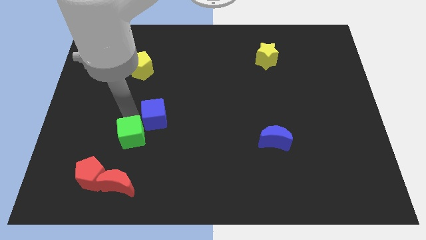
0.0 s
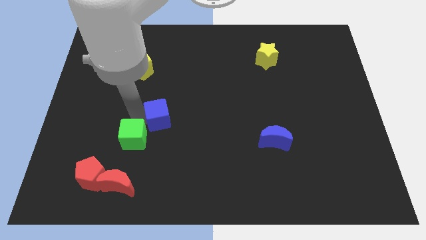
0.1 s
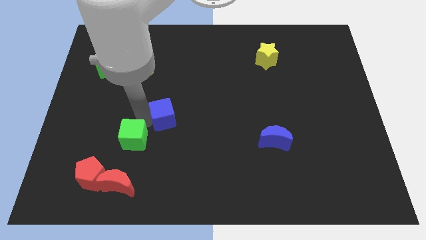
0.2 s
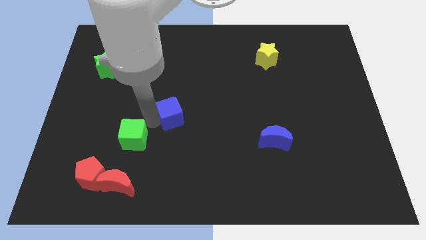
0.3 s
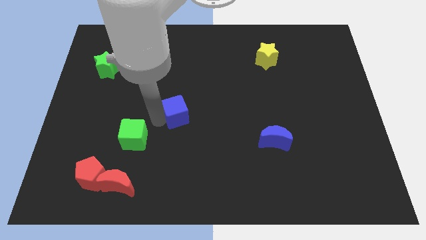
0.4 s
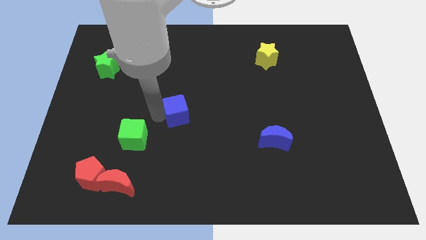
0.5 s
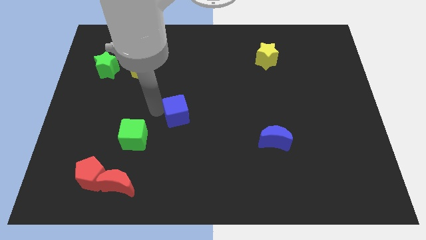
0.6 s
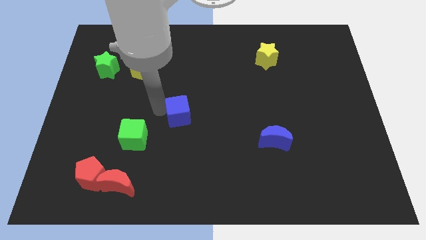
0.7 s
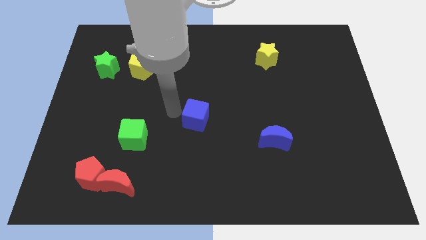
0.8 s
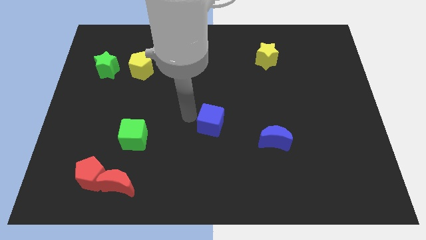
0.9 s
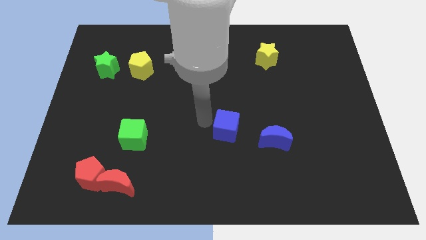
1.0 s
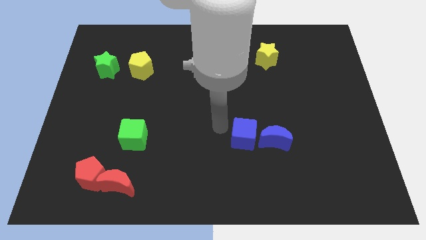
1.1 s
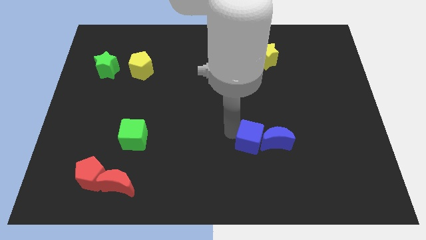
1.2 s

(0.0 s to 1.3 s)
separate blue cube from green cube

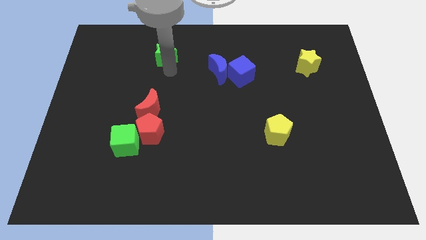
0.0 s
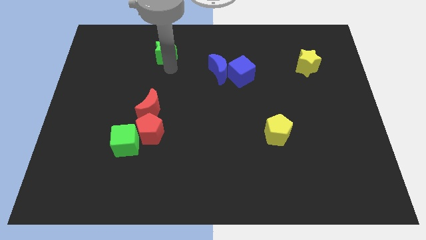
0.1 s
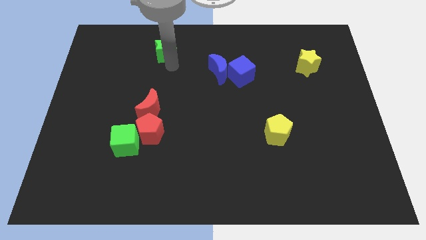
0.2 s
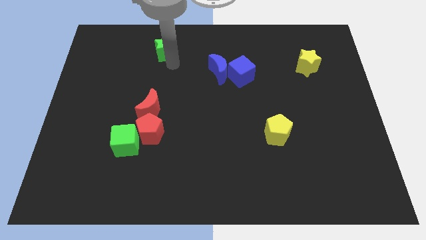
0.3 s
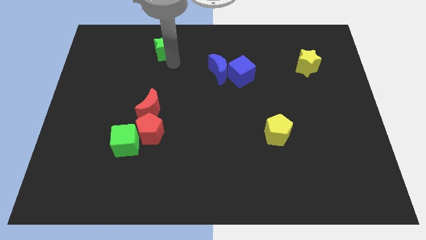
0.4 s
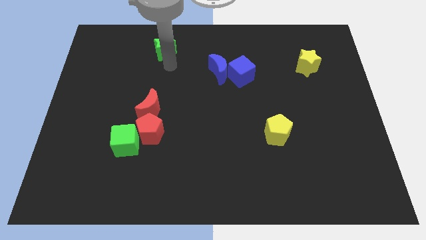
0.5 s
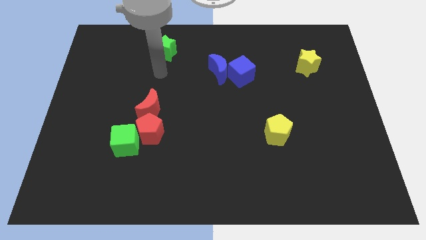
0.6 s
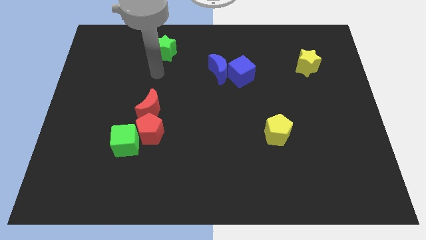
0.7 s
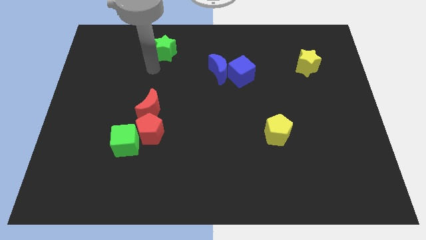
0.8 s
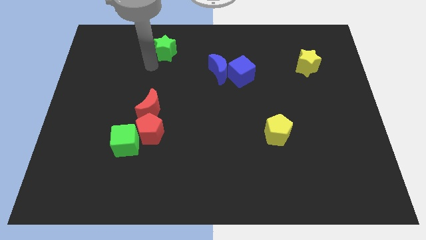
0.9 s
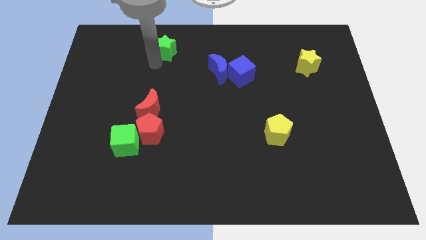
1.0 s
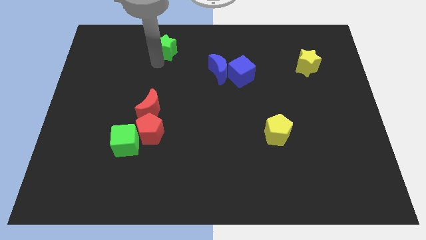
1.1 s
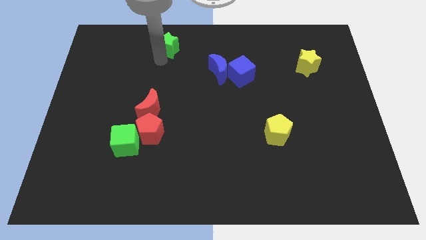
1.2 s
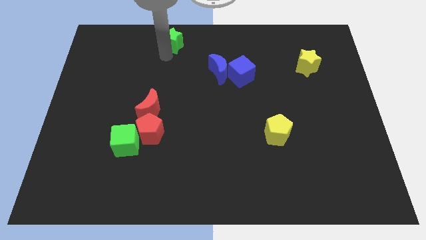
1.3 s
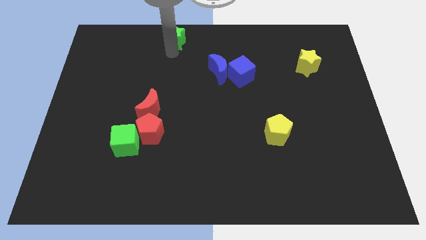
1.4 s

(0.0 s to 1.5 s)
push the green star slightly up side

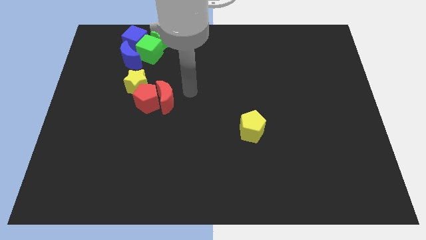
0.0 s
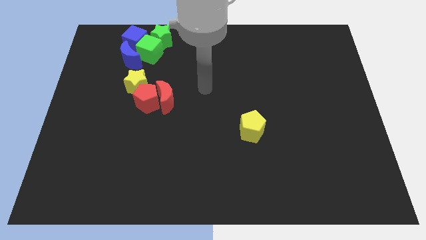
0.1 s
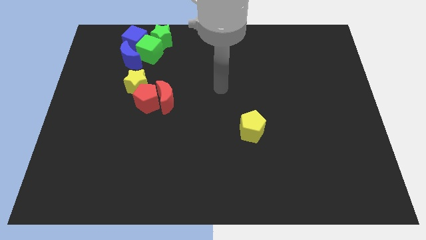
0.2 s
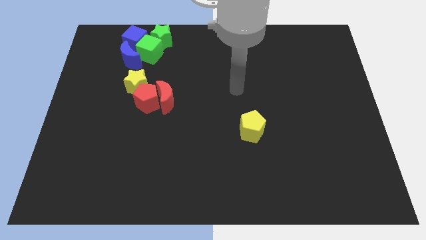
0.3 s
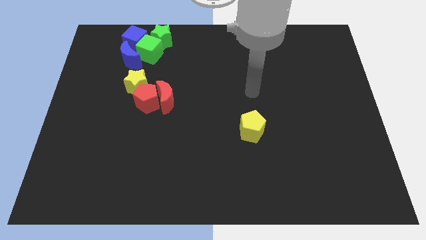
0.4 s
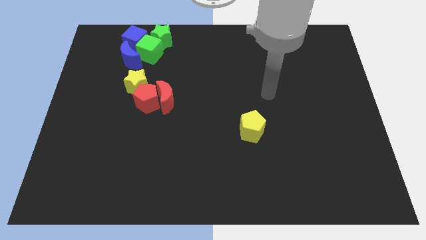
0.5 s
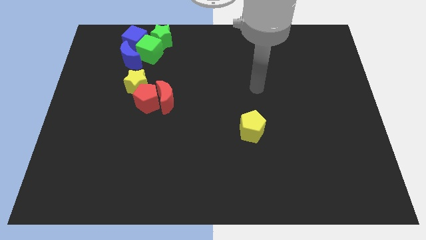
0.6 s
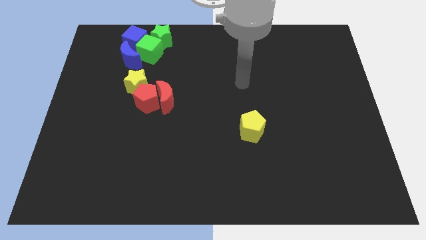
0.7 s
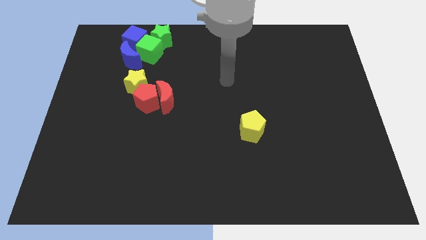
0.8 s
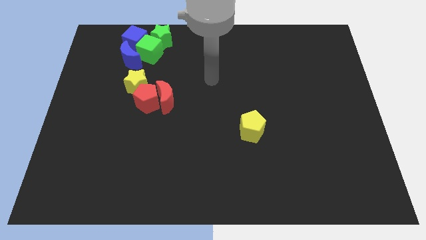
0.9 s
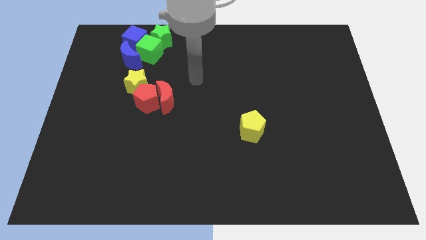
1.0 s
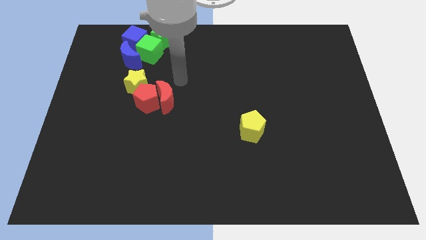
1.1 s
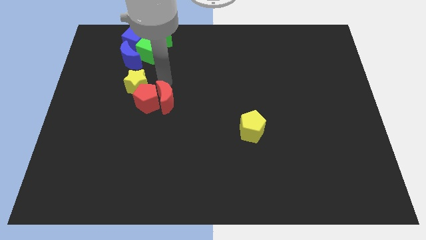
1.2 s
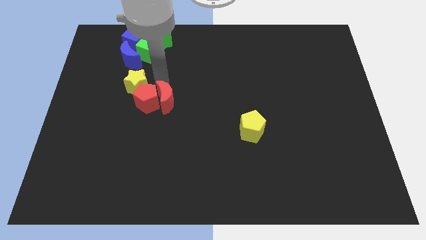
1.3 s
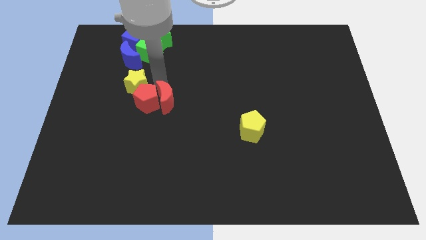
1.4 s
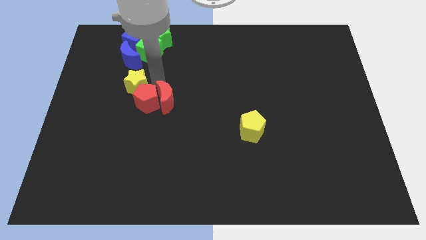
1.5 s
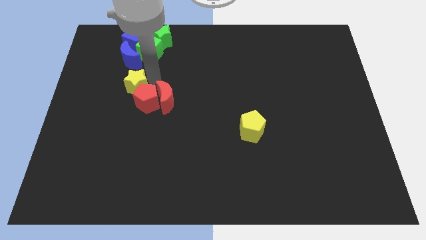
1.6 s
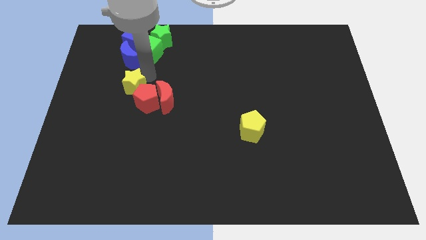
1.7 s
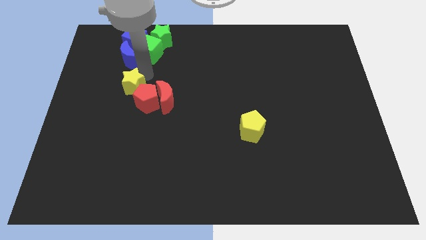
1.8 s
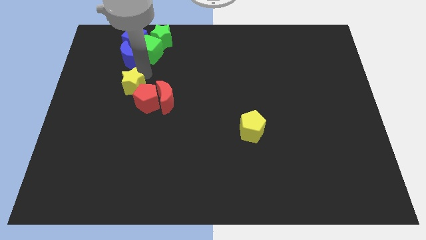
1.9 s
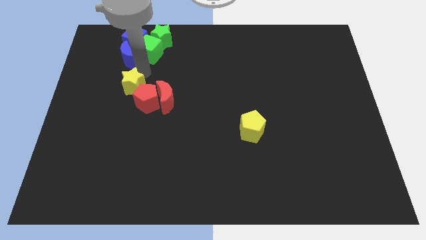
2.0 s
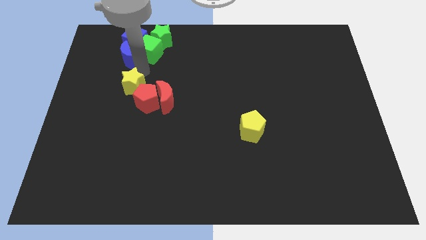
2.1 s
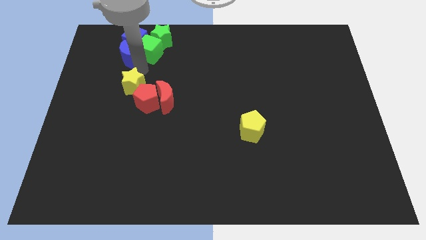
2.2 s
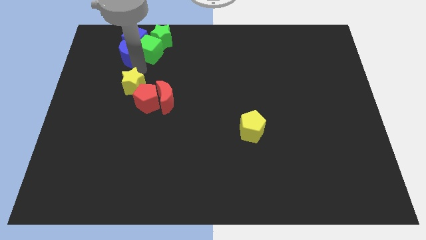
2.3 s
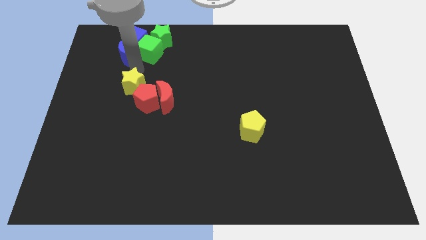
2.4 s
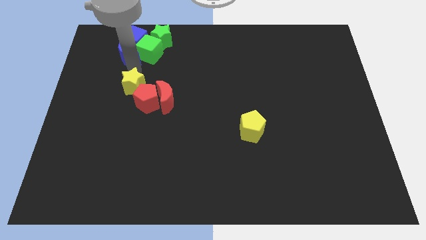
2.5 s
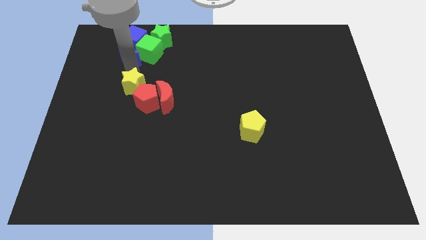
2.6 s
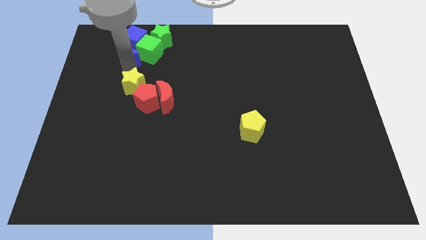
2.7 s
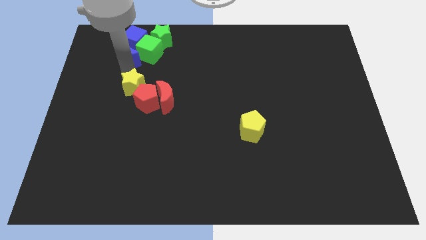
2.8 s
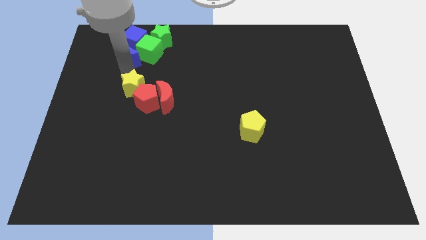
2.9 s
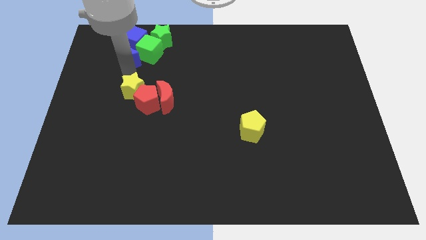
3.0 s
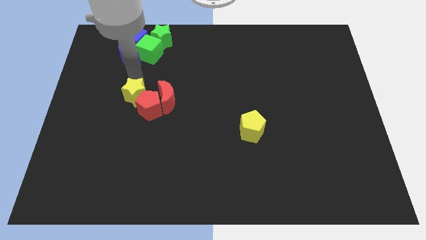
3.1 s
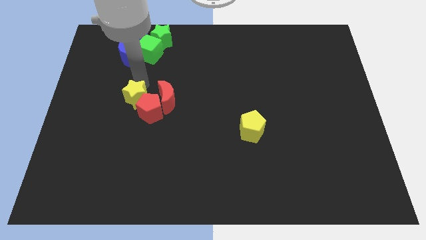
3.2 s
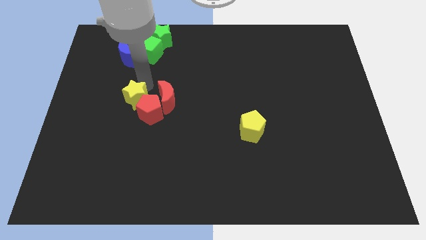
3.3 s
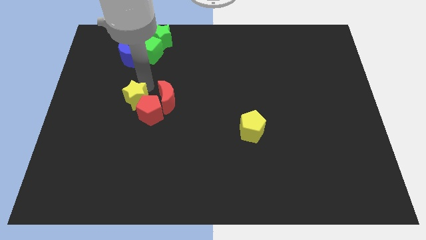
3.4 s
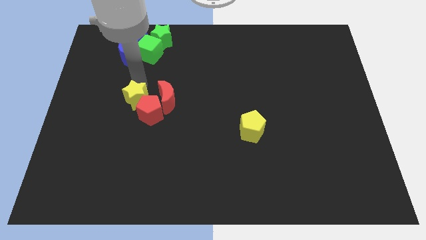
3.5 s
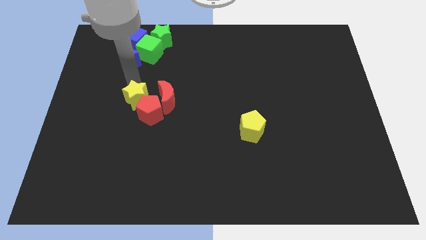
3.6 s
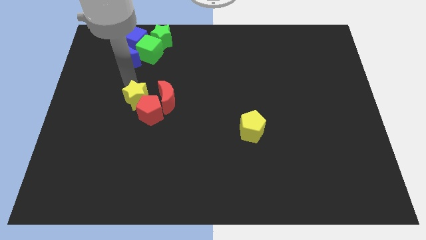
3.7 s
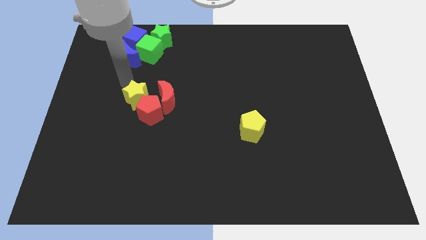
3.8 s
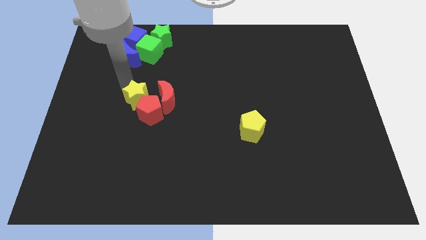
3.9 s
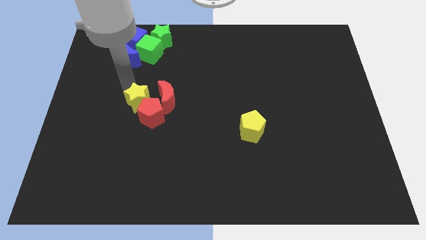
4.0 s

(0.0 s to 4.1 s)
push the yellow star slightly towards bottom side

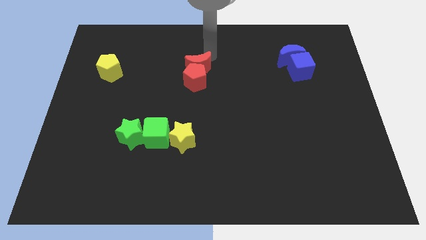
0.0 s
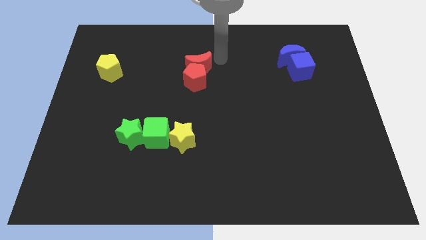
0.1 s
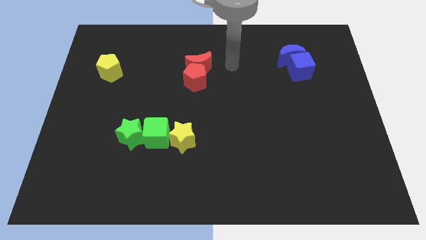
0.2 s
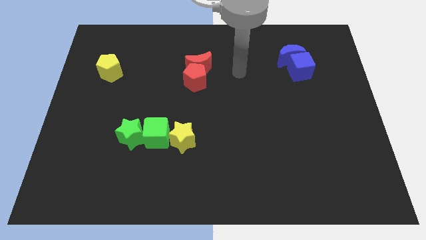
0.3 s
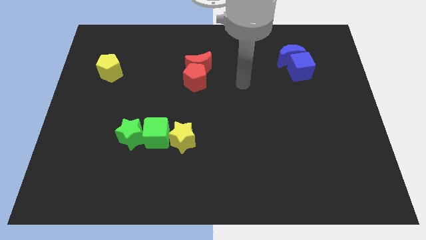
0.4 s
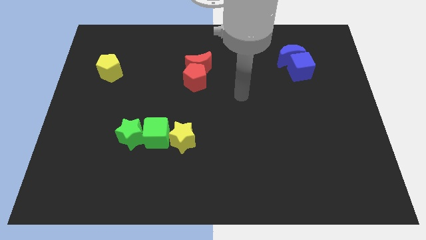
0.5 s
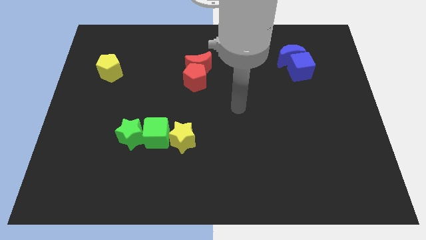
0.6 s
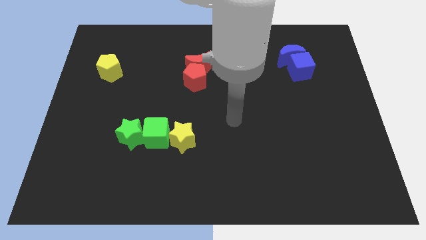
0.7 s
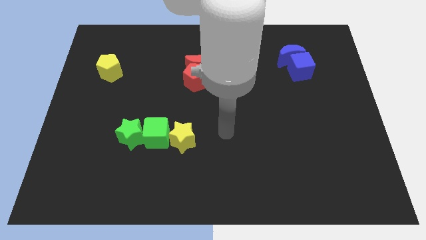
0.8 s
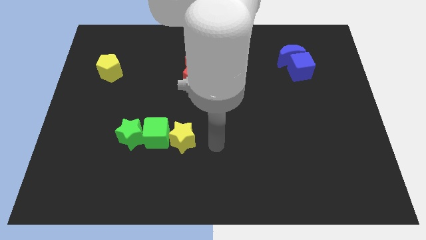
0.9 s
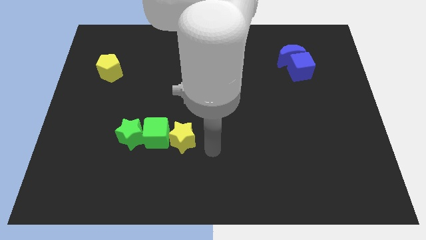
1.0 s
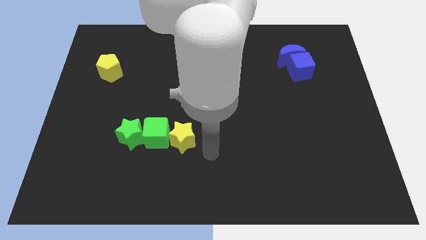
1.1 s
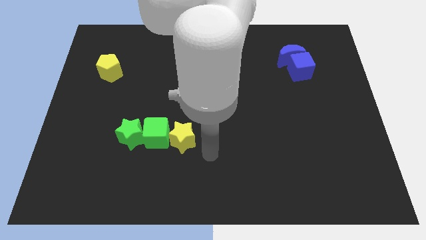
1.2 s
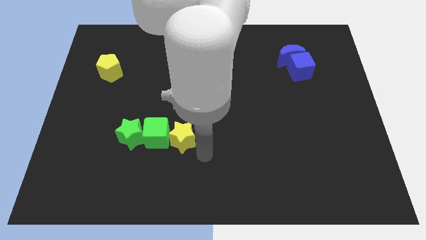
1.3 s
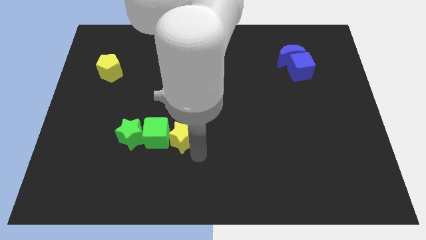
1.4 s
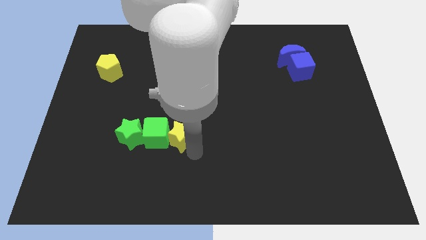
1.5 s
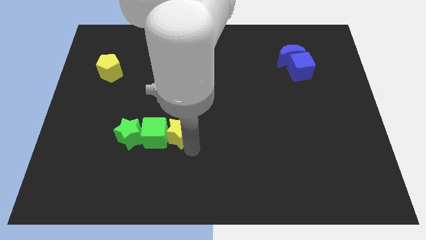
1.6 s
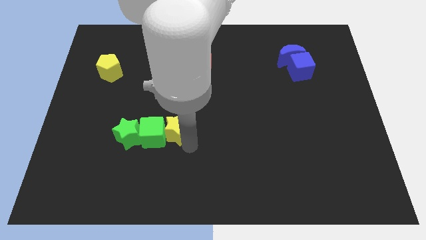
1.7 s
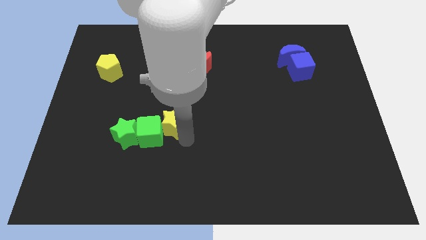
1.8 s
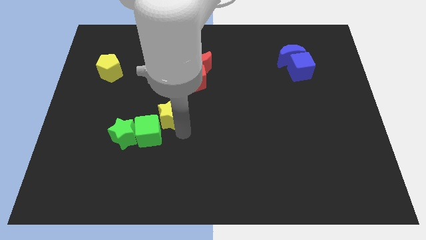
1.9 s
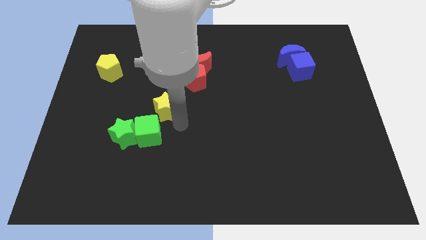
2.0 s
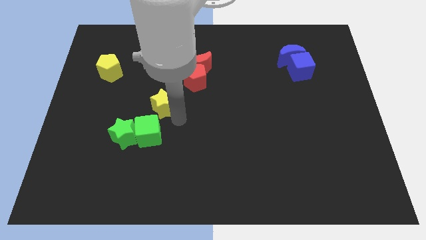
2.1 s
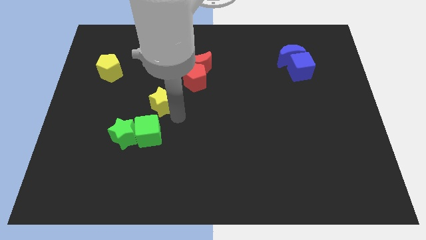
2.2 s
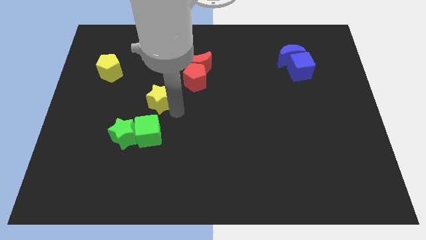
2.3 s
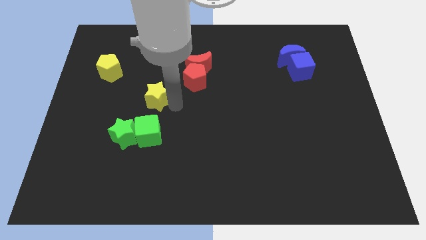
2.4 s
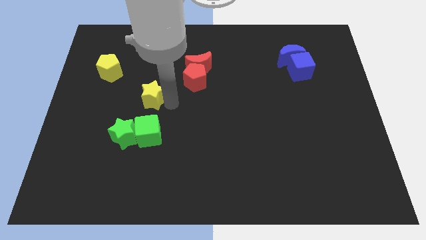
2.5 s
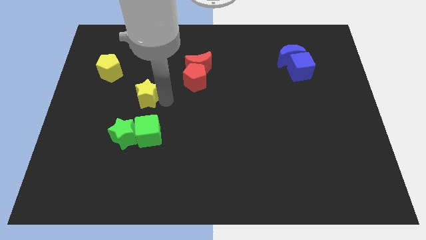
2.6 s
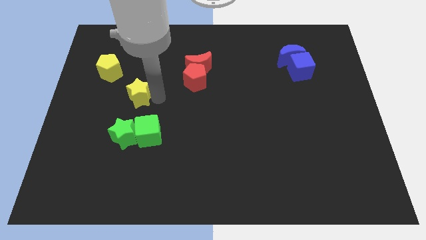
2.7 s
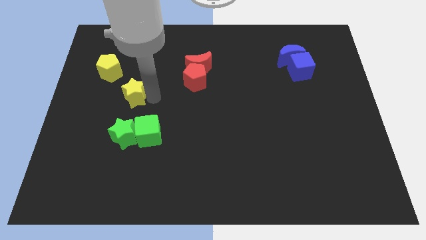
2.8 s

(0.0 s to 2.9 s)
move the yellow star towards the yellow pentagon
